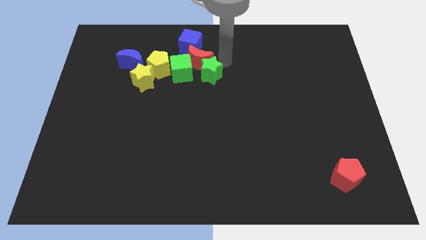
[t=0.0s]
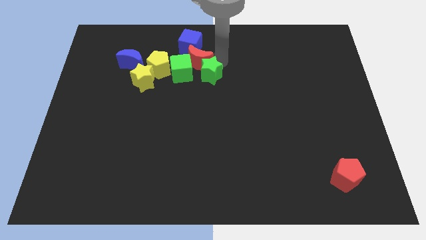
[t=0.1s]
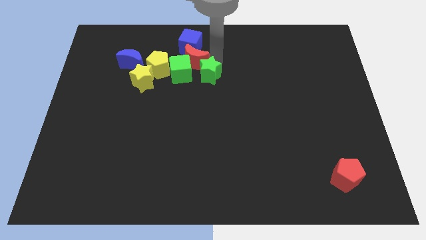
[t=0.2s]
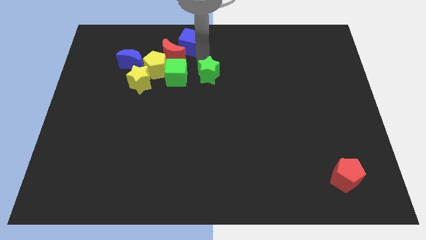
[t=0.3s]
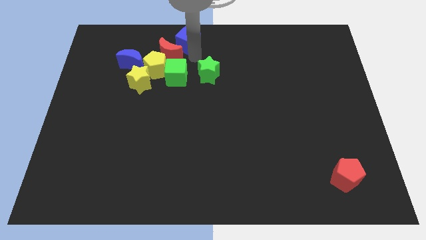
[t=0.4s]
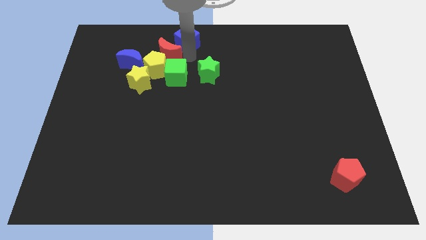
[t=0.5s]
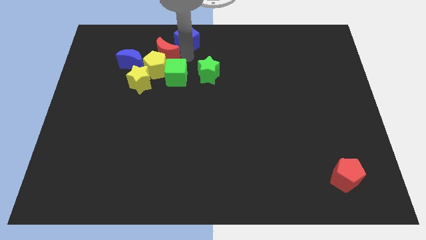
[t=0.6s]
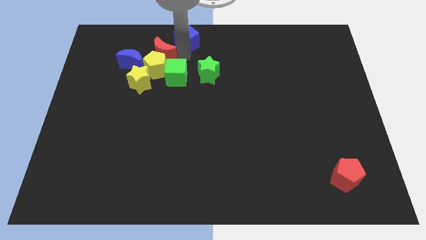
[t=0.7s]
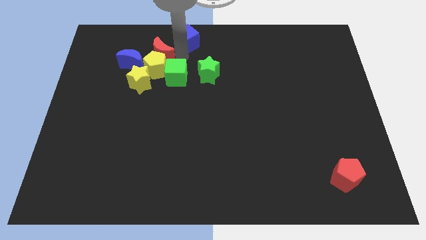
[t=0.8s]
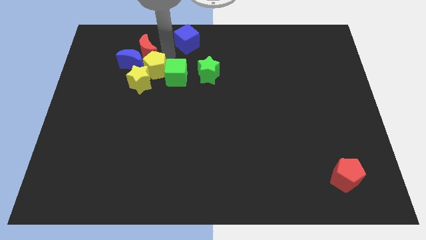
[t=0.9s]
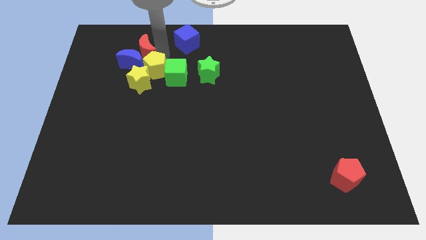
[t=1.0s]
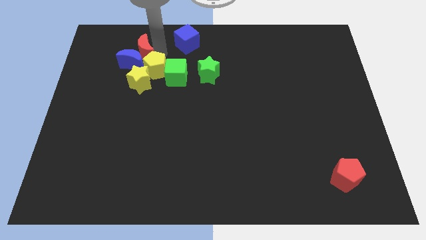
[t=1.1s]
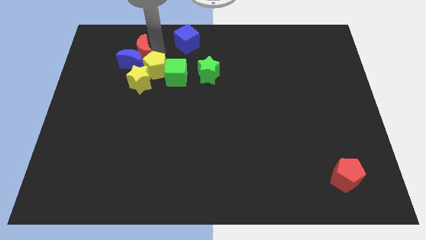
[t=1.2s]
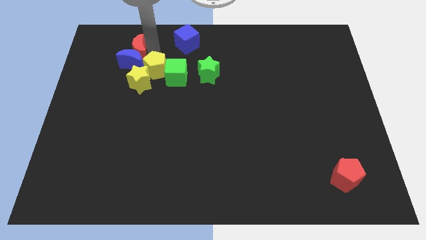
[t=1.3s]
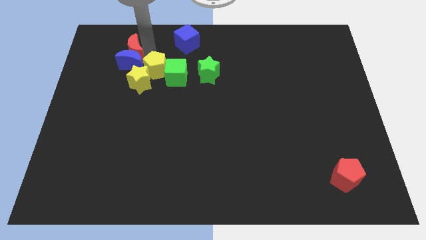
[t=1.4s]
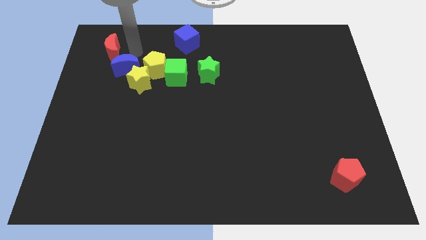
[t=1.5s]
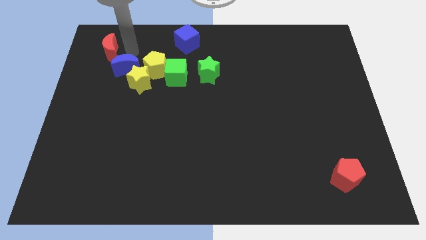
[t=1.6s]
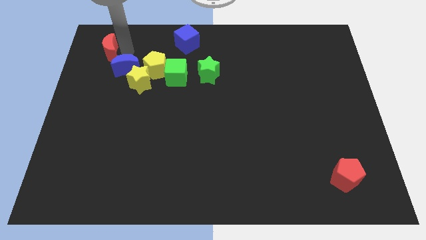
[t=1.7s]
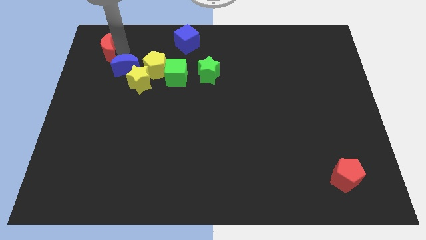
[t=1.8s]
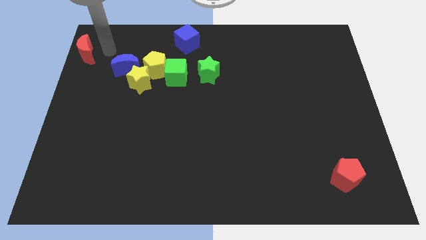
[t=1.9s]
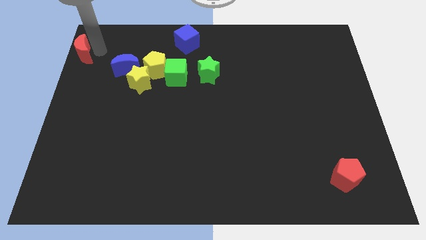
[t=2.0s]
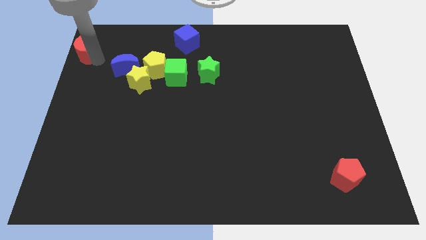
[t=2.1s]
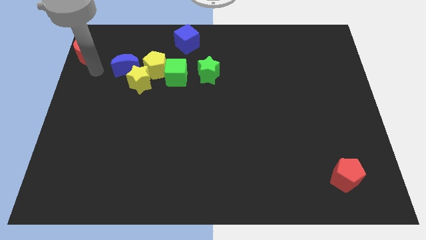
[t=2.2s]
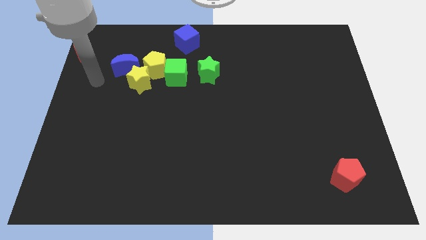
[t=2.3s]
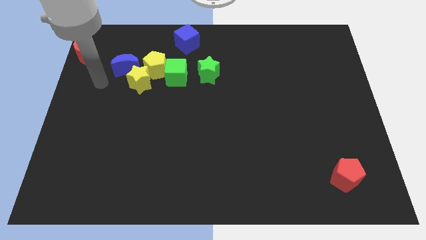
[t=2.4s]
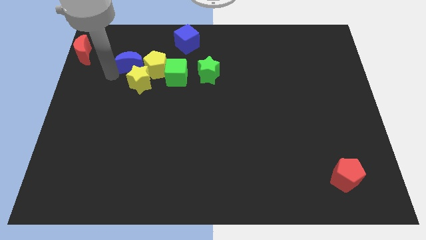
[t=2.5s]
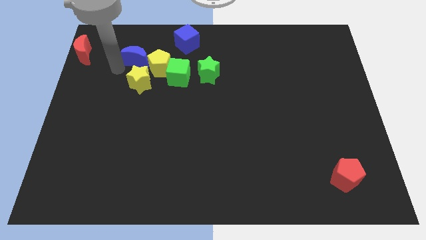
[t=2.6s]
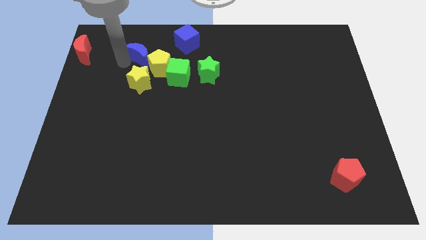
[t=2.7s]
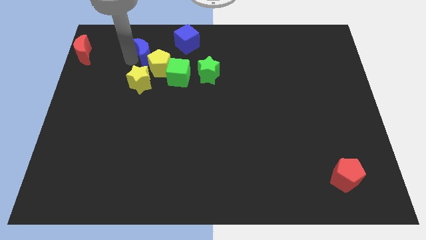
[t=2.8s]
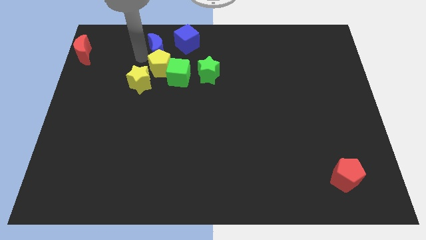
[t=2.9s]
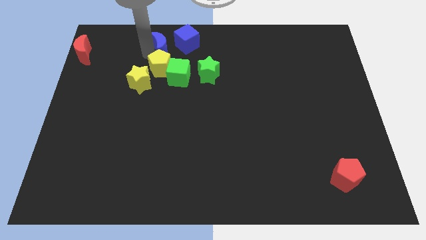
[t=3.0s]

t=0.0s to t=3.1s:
place red crescent to the top left corner of the board

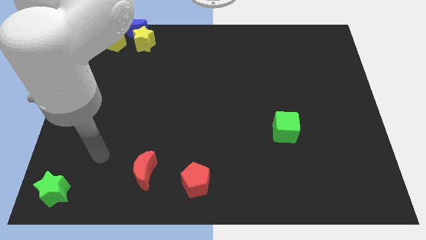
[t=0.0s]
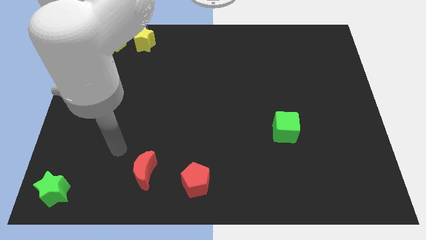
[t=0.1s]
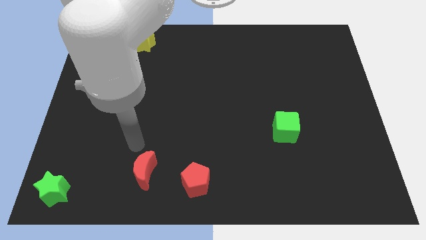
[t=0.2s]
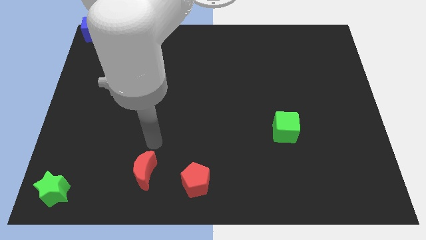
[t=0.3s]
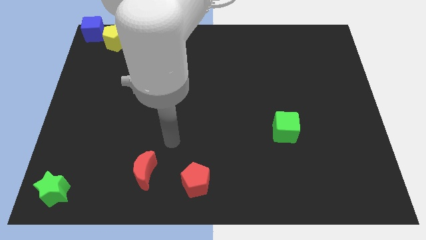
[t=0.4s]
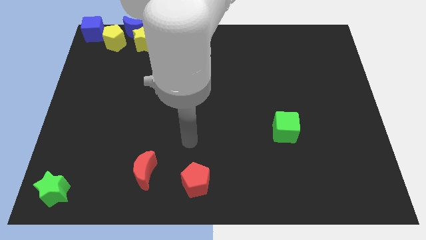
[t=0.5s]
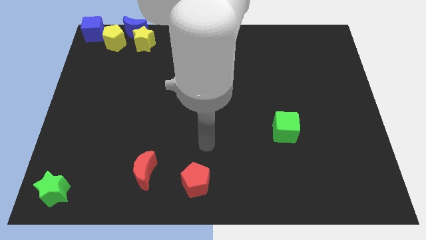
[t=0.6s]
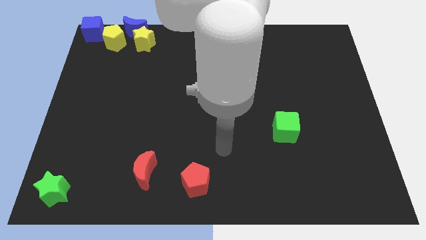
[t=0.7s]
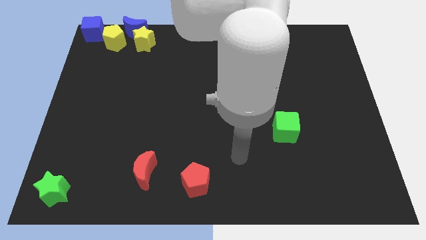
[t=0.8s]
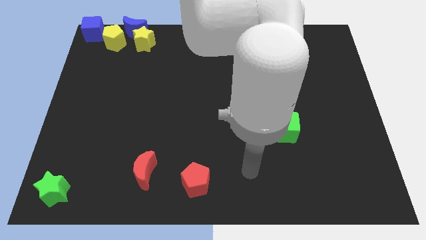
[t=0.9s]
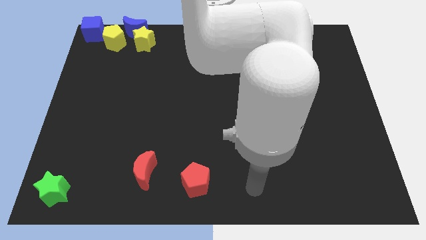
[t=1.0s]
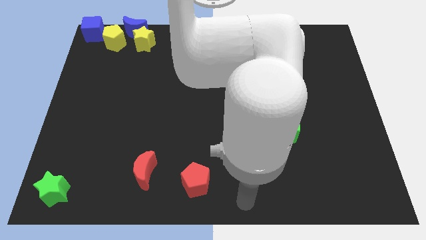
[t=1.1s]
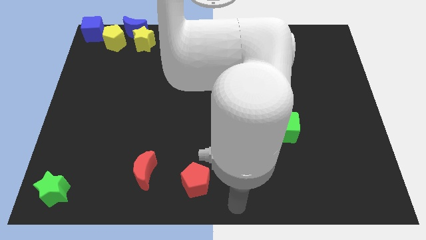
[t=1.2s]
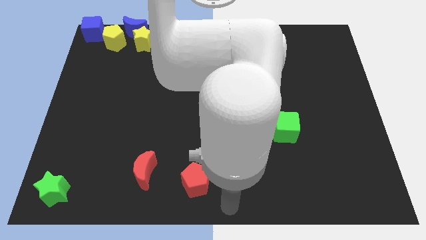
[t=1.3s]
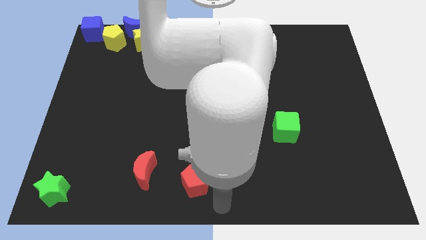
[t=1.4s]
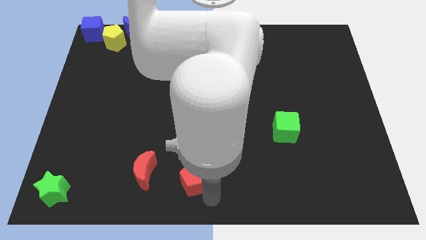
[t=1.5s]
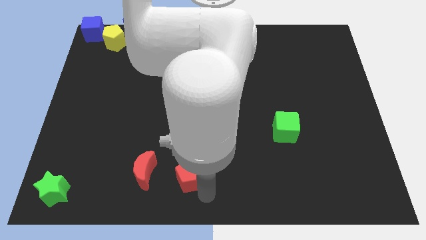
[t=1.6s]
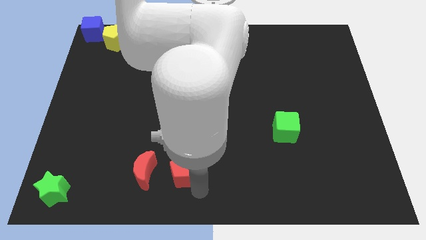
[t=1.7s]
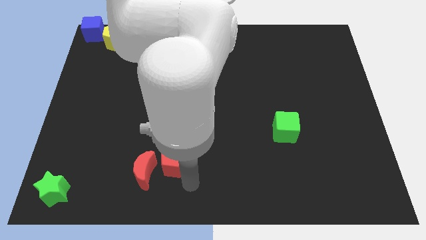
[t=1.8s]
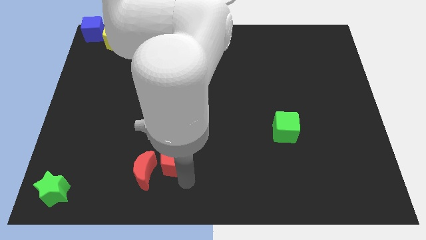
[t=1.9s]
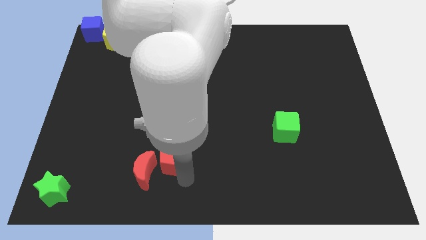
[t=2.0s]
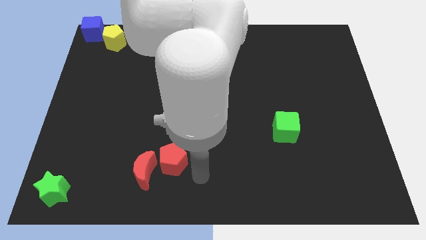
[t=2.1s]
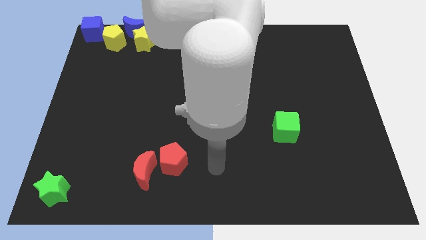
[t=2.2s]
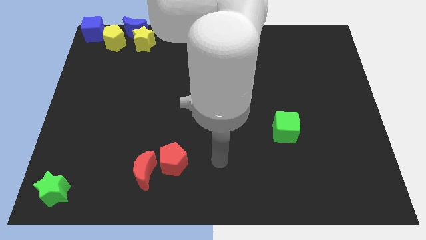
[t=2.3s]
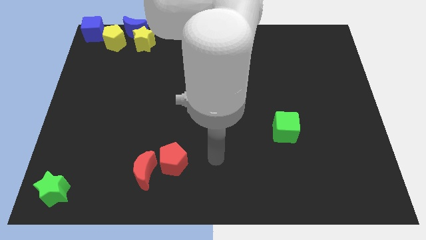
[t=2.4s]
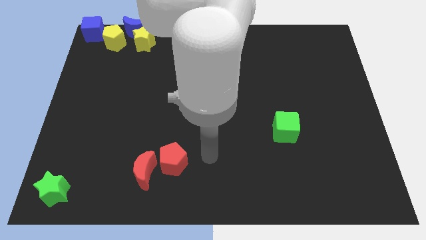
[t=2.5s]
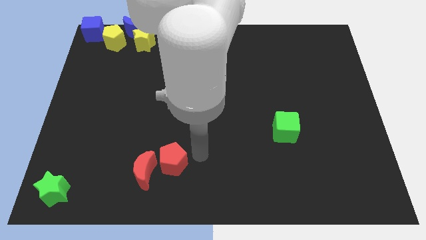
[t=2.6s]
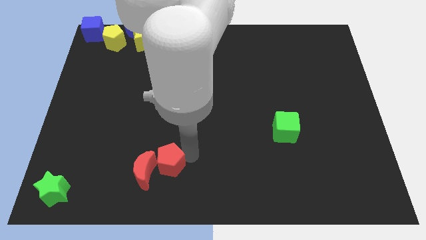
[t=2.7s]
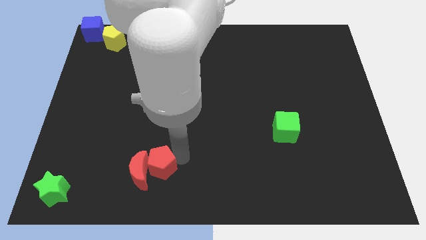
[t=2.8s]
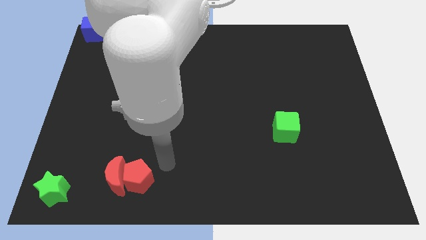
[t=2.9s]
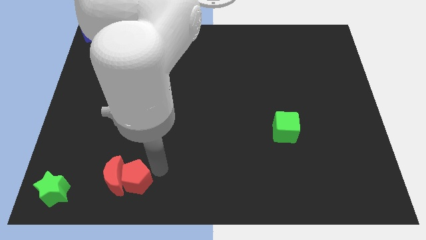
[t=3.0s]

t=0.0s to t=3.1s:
push the red pentagon into the red crescent

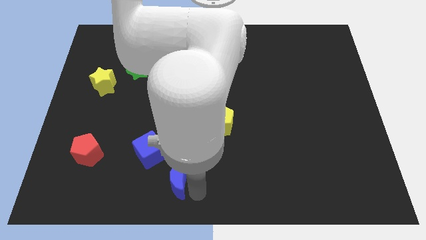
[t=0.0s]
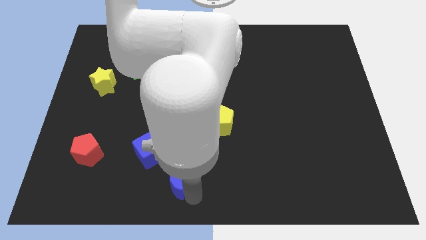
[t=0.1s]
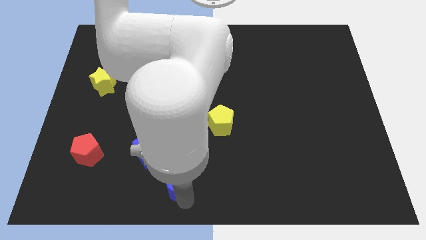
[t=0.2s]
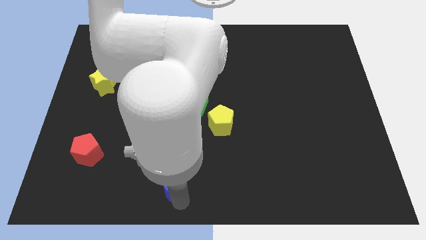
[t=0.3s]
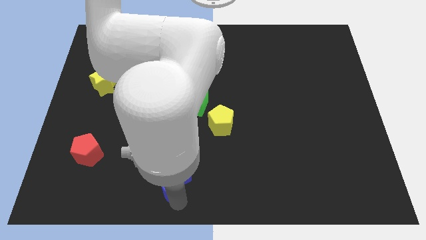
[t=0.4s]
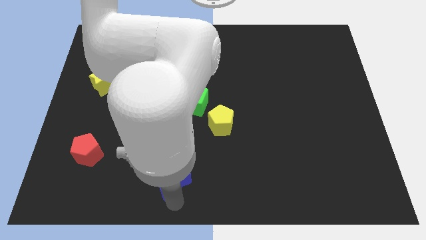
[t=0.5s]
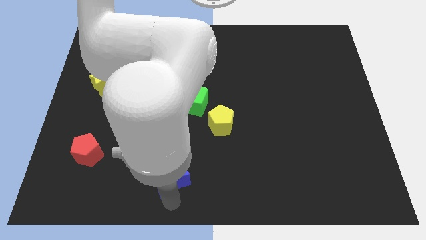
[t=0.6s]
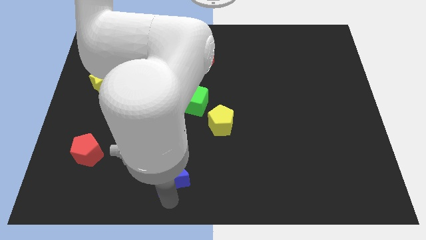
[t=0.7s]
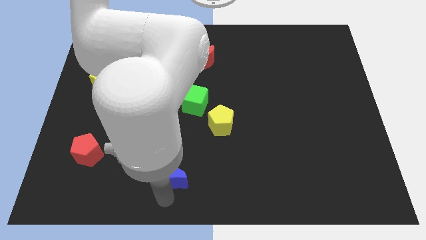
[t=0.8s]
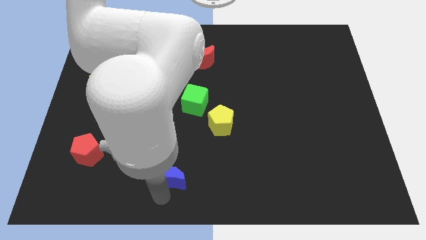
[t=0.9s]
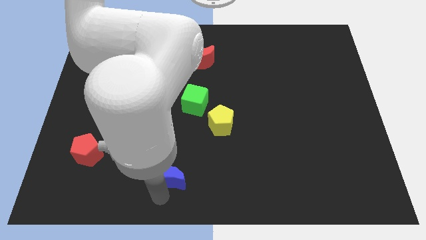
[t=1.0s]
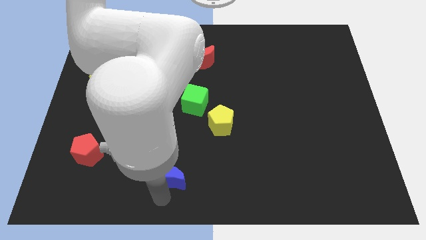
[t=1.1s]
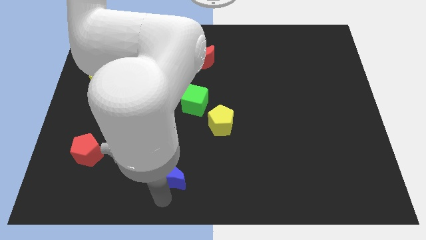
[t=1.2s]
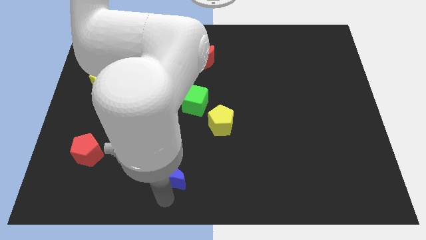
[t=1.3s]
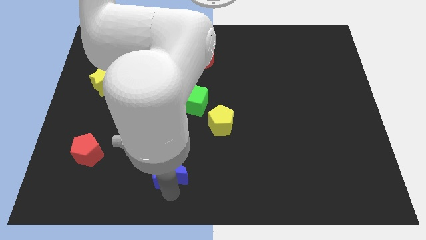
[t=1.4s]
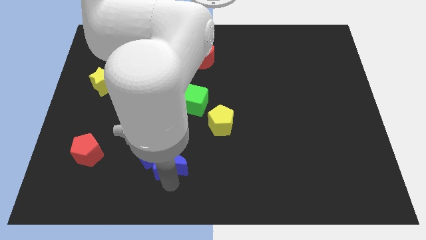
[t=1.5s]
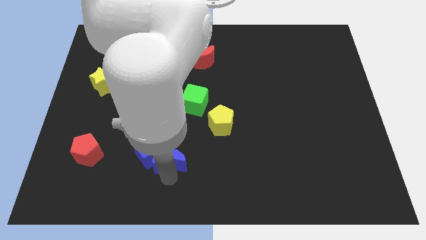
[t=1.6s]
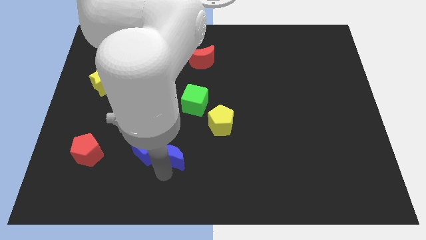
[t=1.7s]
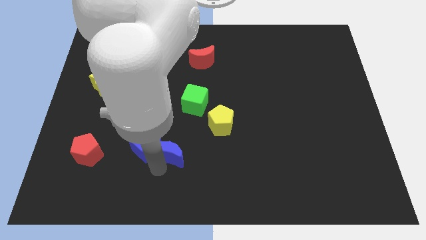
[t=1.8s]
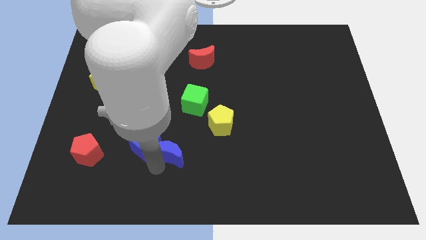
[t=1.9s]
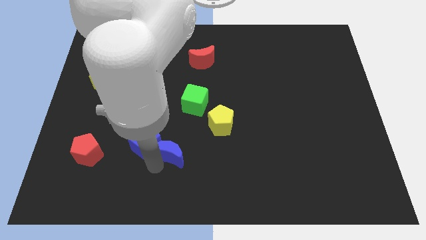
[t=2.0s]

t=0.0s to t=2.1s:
slide blue moon into the blue cube

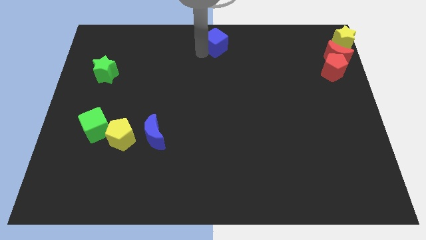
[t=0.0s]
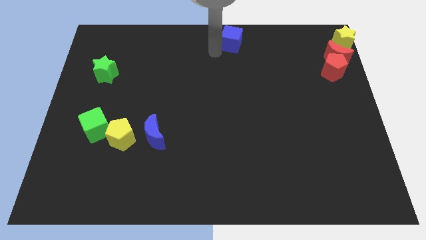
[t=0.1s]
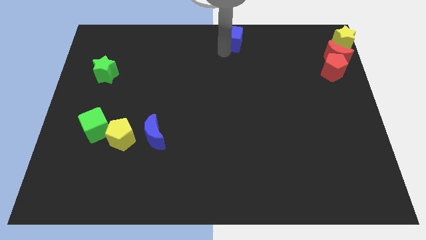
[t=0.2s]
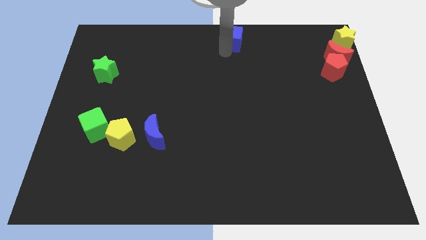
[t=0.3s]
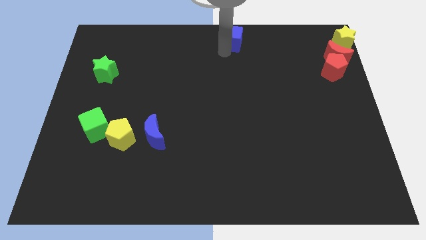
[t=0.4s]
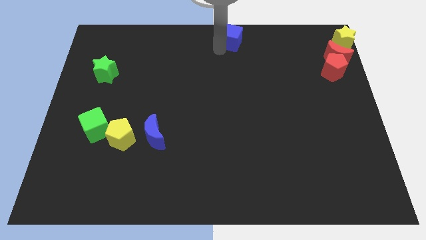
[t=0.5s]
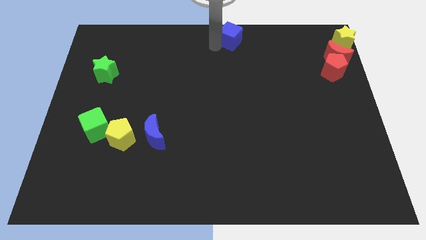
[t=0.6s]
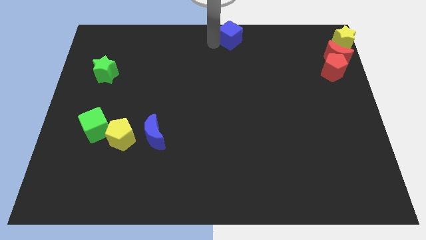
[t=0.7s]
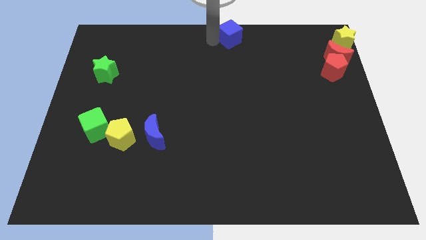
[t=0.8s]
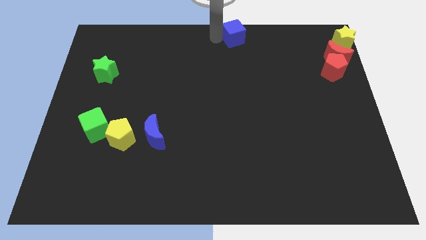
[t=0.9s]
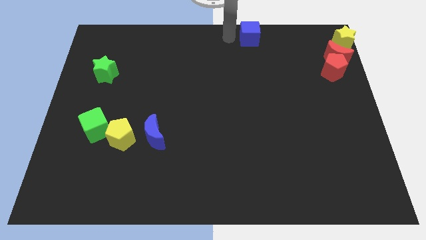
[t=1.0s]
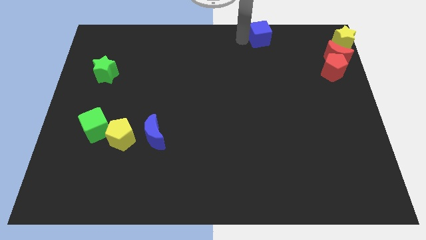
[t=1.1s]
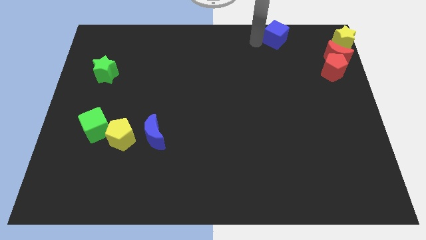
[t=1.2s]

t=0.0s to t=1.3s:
move blue cube slightly to the right side of the board
